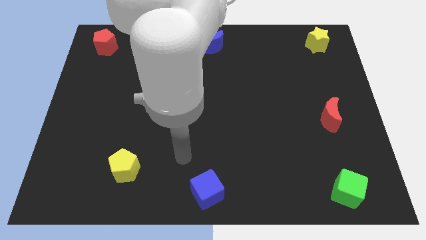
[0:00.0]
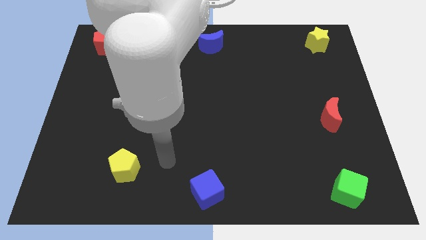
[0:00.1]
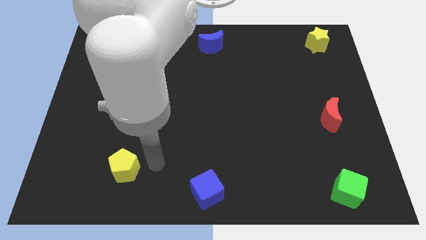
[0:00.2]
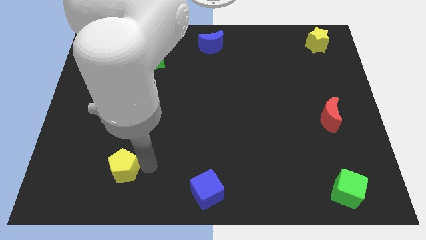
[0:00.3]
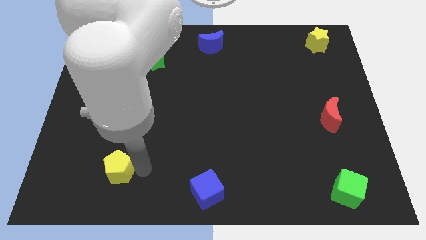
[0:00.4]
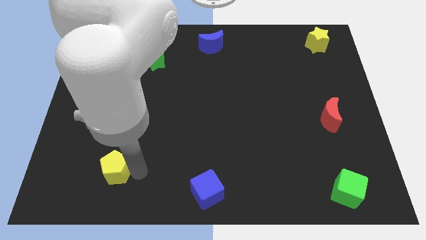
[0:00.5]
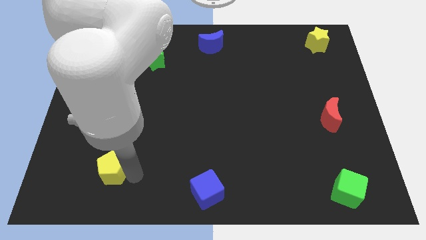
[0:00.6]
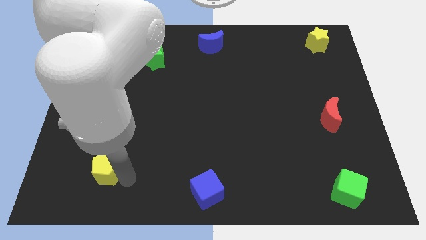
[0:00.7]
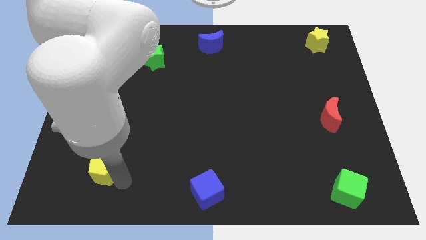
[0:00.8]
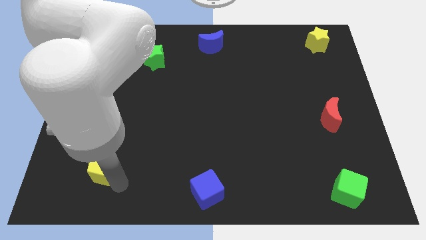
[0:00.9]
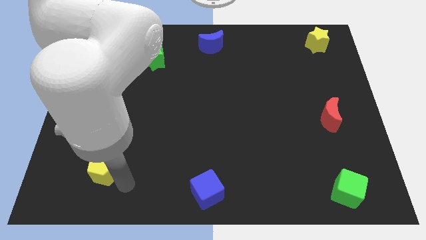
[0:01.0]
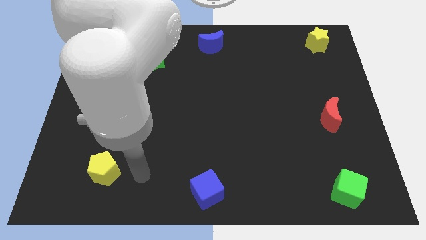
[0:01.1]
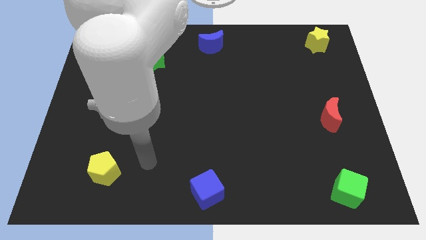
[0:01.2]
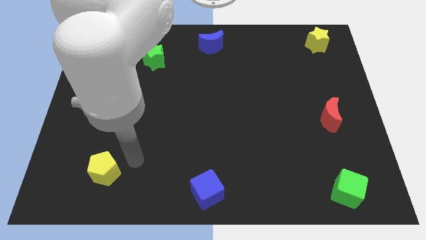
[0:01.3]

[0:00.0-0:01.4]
slide the yellow pentagon slightly to the left

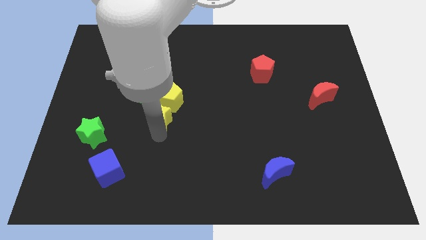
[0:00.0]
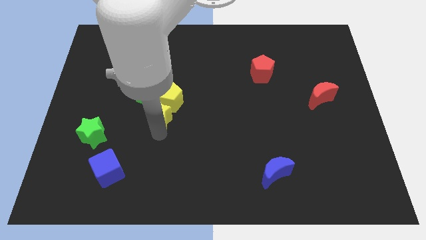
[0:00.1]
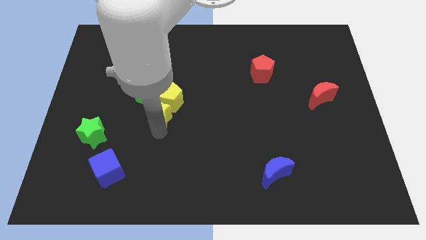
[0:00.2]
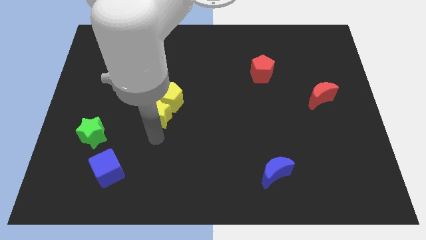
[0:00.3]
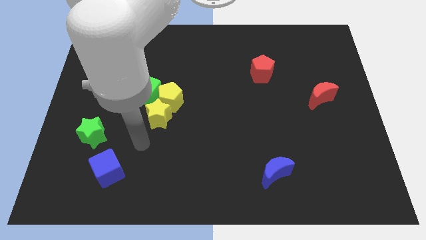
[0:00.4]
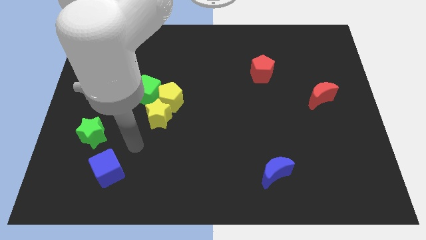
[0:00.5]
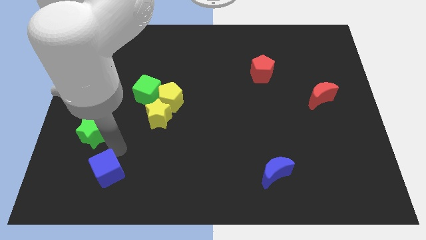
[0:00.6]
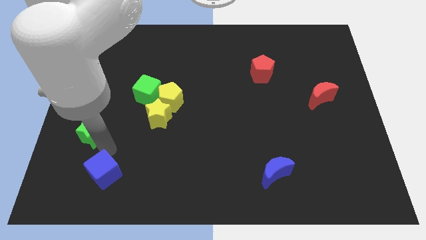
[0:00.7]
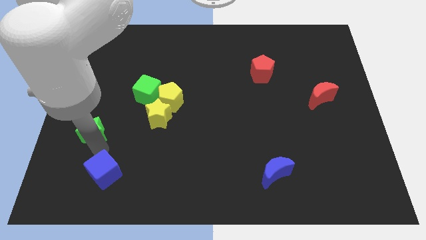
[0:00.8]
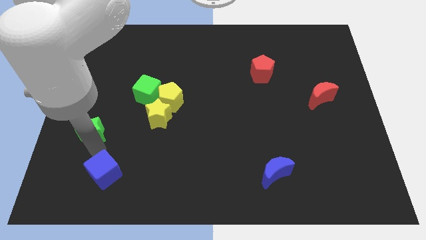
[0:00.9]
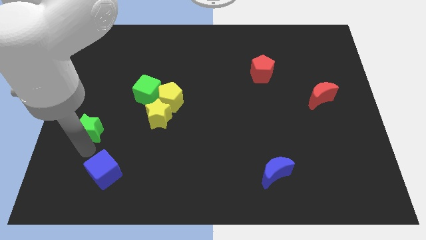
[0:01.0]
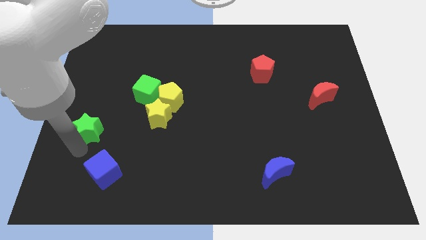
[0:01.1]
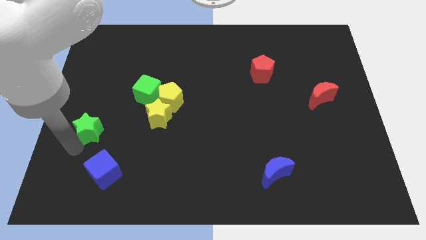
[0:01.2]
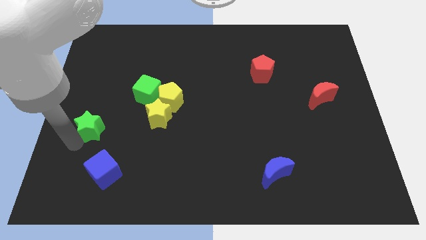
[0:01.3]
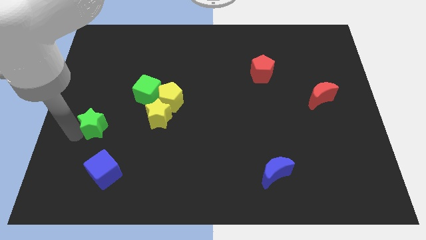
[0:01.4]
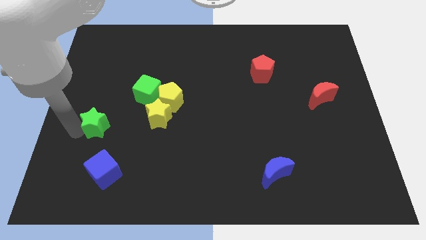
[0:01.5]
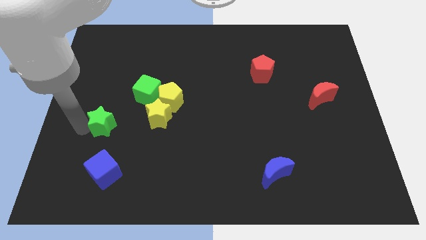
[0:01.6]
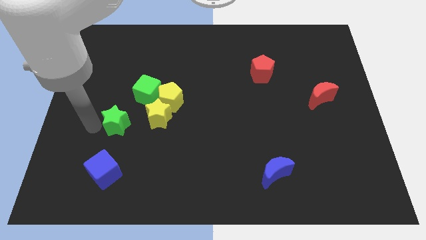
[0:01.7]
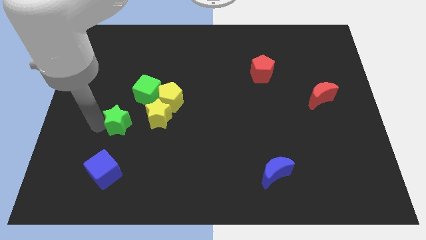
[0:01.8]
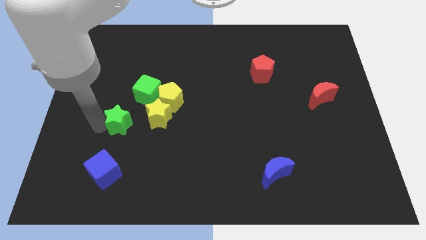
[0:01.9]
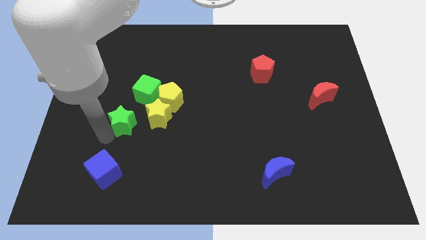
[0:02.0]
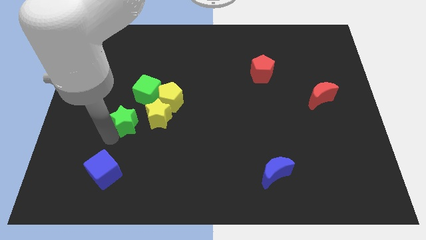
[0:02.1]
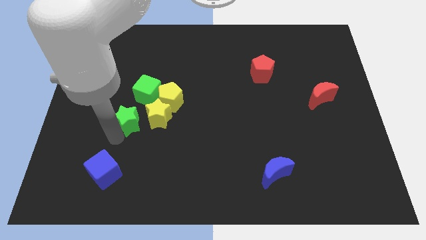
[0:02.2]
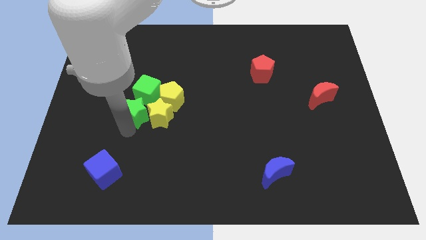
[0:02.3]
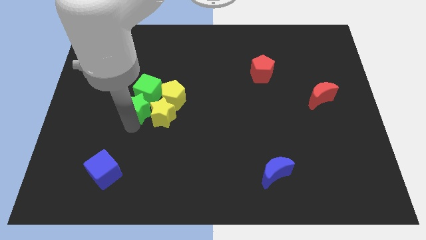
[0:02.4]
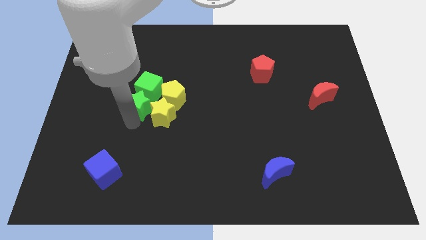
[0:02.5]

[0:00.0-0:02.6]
place the green star left to the yellow star

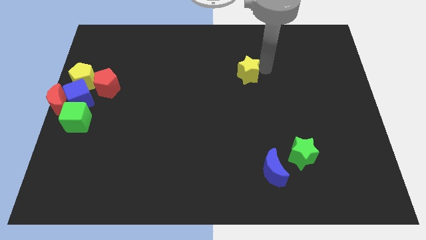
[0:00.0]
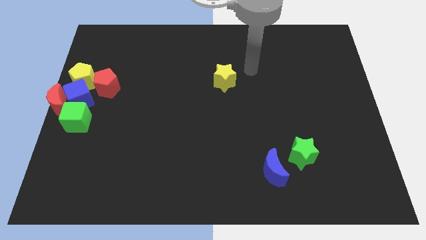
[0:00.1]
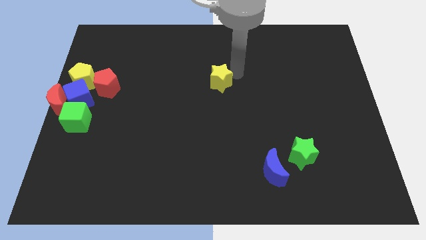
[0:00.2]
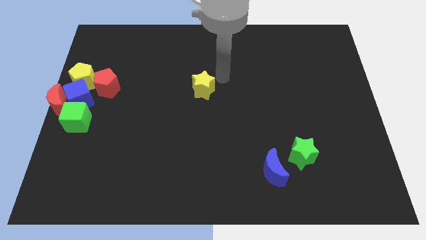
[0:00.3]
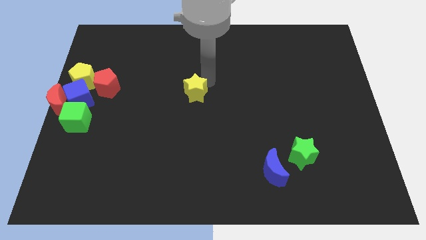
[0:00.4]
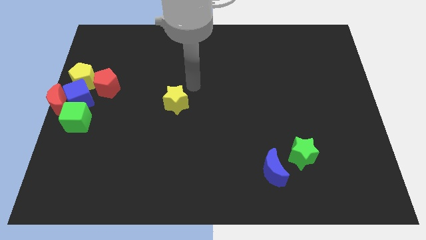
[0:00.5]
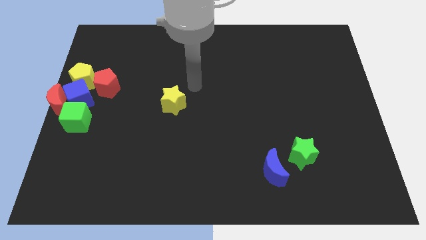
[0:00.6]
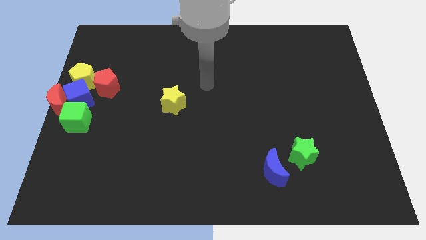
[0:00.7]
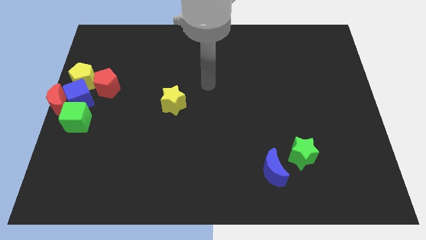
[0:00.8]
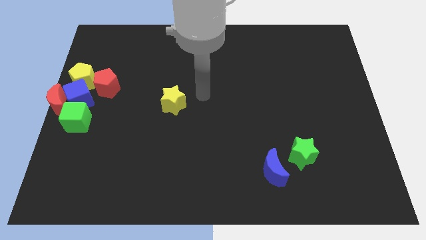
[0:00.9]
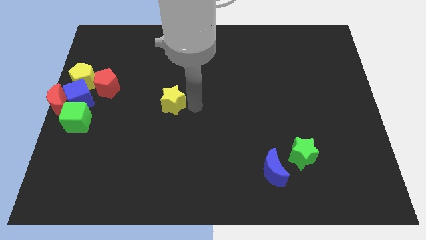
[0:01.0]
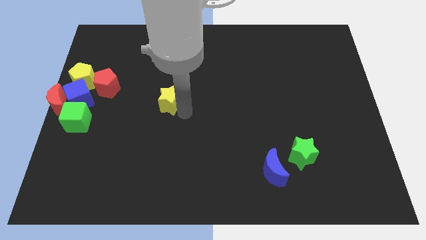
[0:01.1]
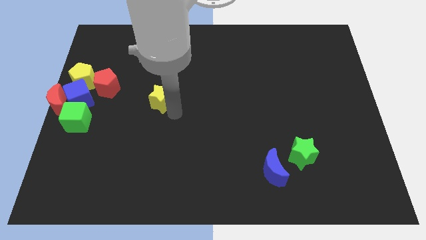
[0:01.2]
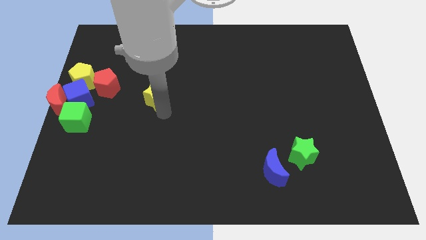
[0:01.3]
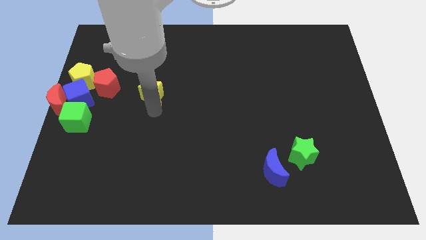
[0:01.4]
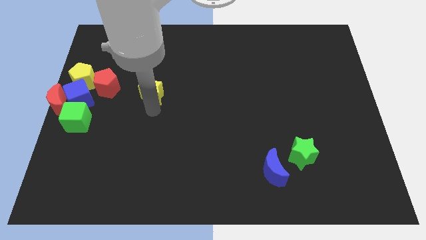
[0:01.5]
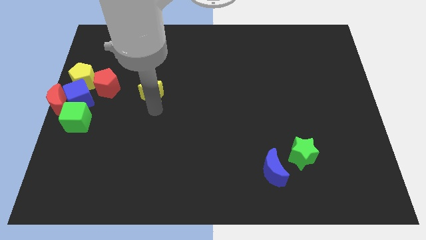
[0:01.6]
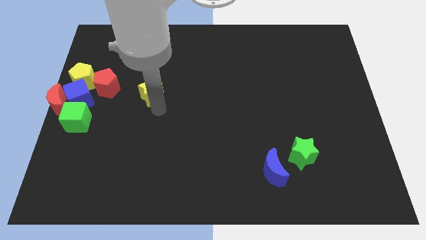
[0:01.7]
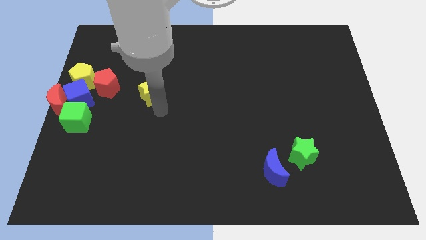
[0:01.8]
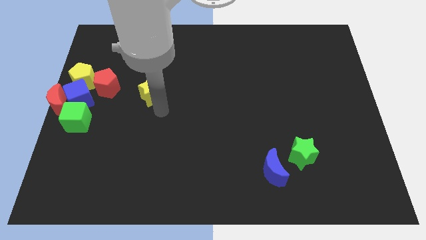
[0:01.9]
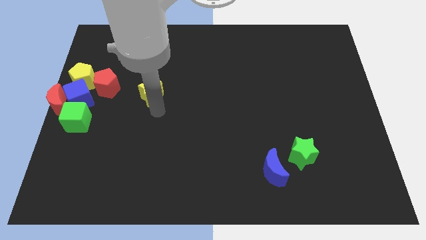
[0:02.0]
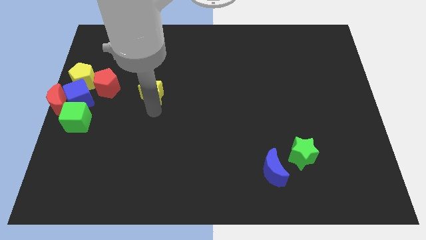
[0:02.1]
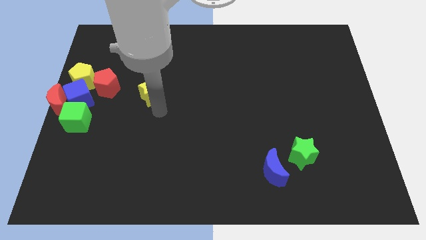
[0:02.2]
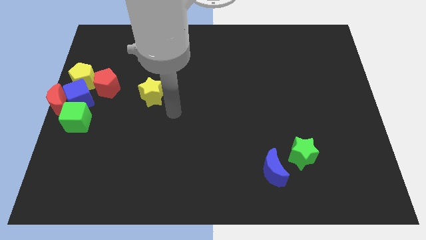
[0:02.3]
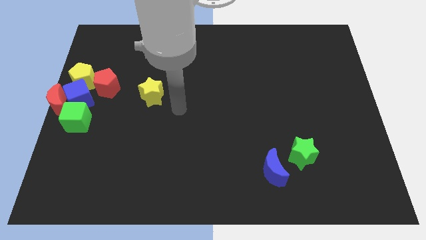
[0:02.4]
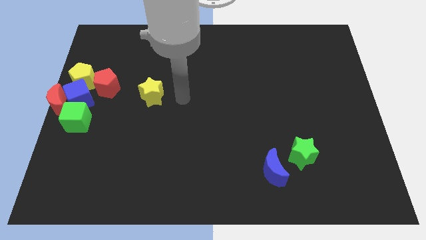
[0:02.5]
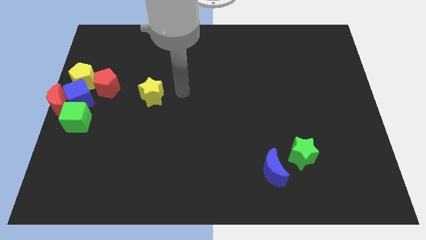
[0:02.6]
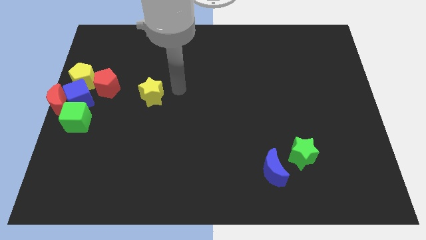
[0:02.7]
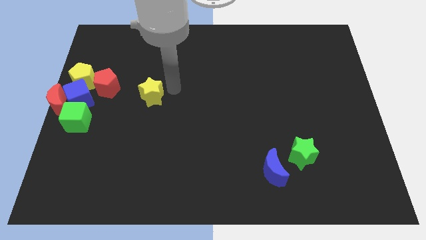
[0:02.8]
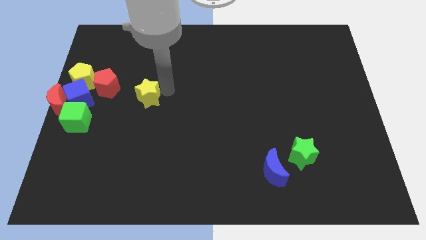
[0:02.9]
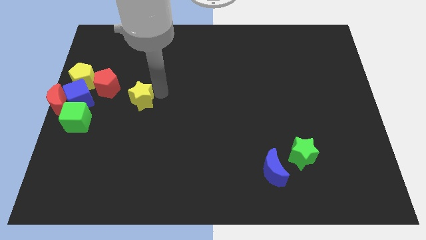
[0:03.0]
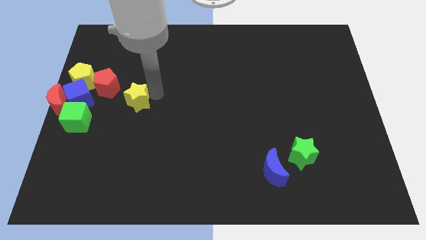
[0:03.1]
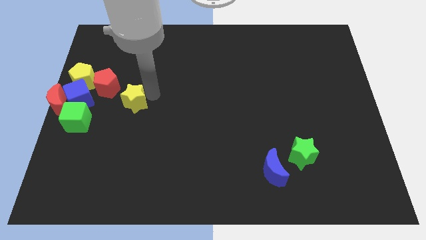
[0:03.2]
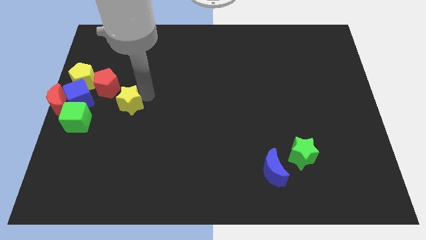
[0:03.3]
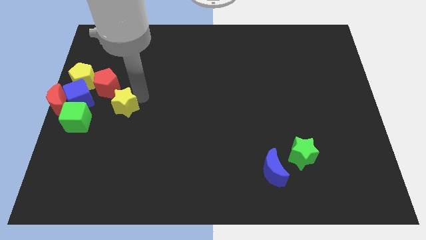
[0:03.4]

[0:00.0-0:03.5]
place the yellow star at the bottom right of red pentagon

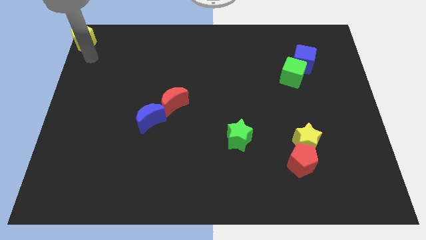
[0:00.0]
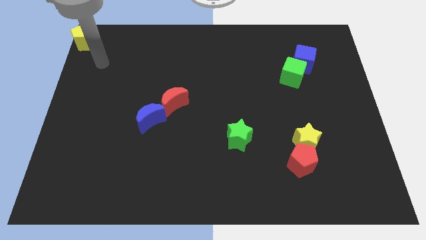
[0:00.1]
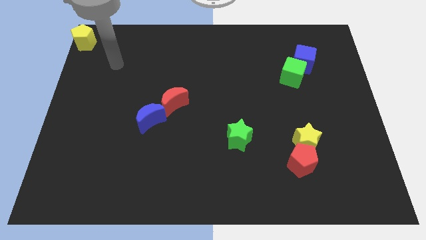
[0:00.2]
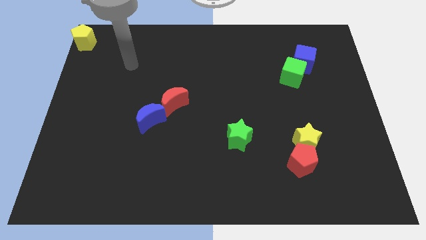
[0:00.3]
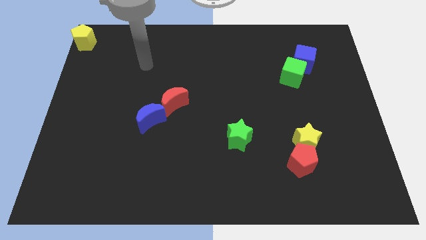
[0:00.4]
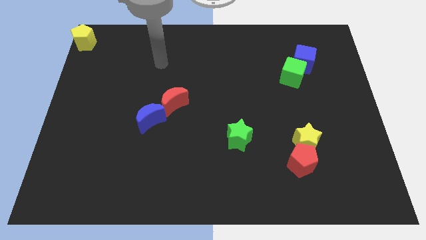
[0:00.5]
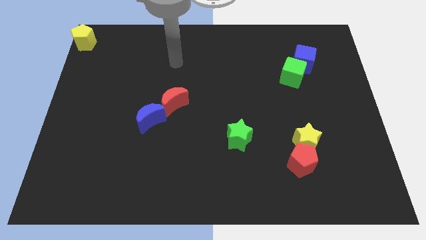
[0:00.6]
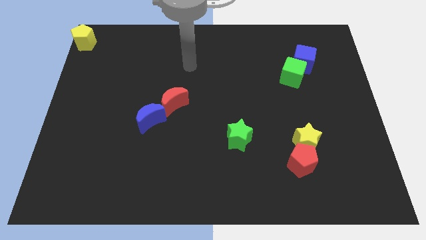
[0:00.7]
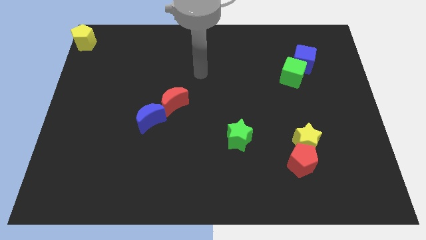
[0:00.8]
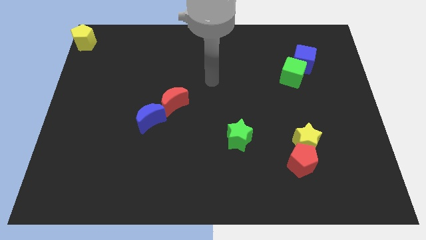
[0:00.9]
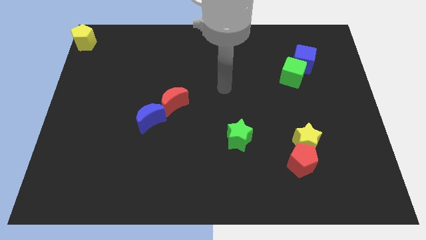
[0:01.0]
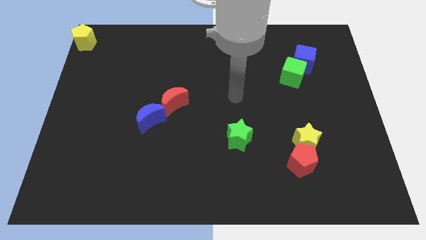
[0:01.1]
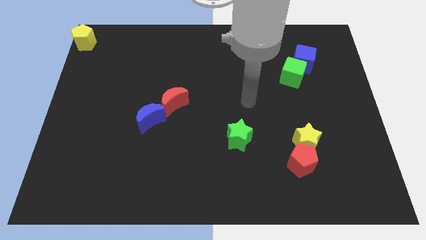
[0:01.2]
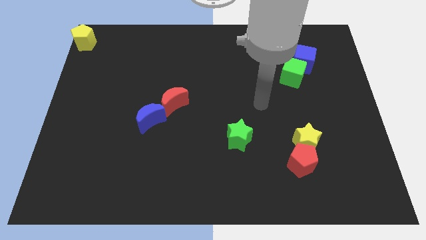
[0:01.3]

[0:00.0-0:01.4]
move your arm away from yellow pentagon
